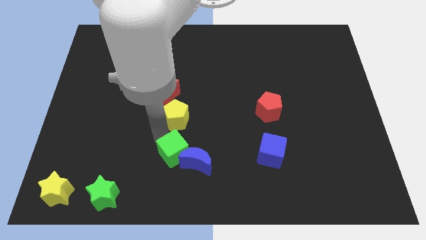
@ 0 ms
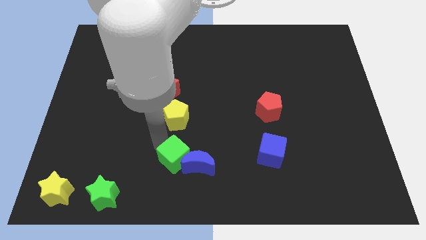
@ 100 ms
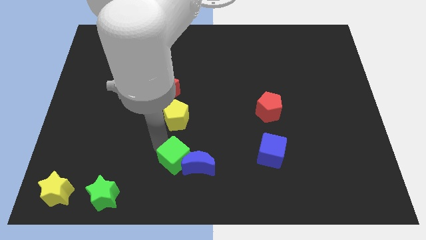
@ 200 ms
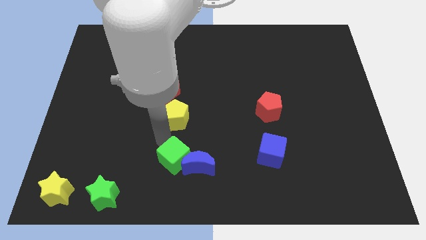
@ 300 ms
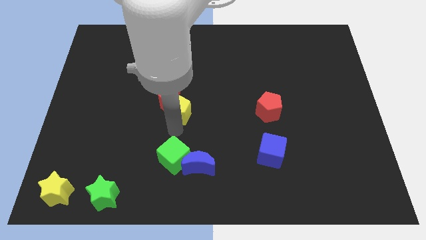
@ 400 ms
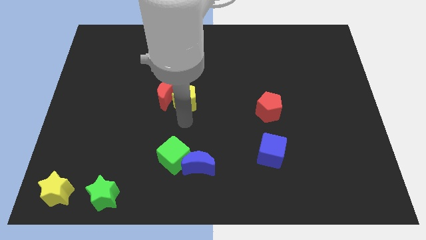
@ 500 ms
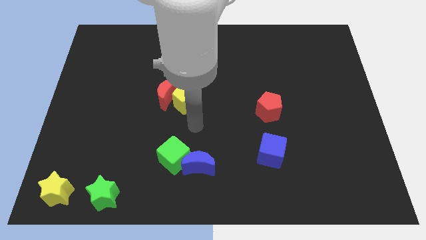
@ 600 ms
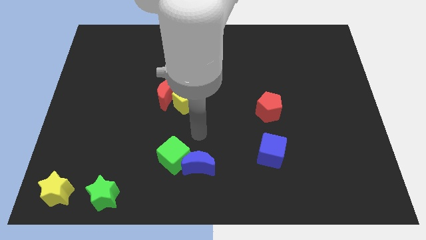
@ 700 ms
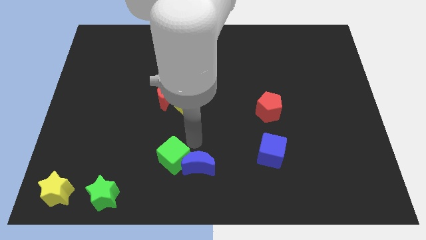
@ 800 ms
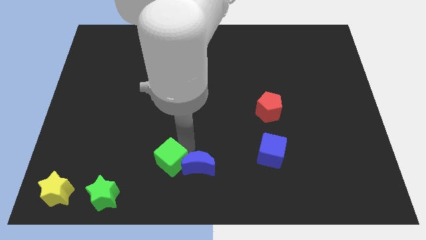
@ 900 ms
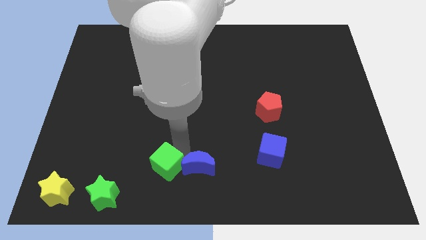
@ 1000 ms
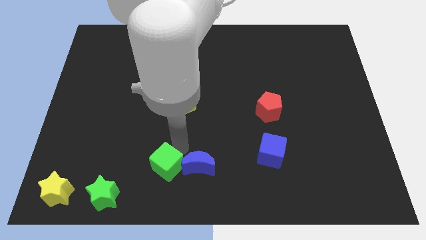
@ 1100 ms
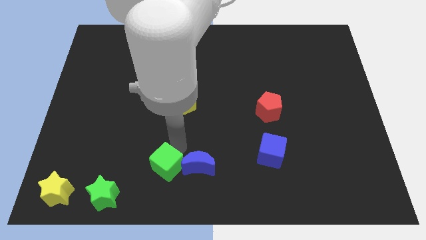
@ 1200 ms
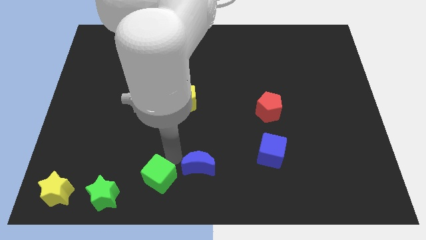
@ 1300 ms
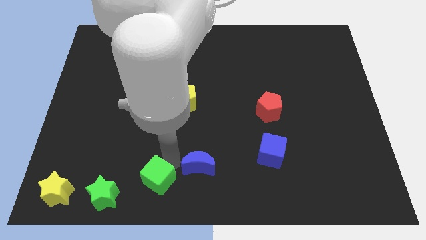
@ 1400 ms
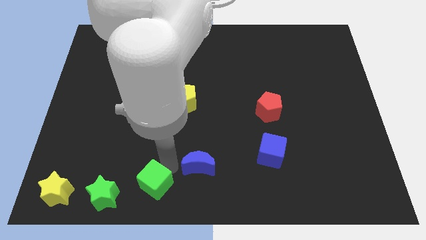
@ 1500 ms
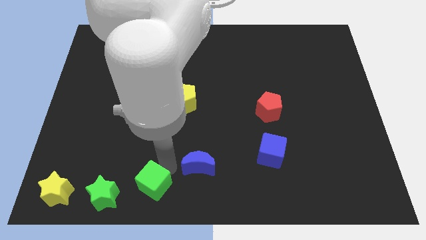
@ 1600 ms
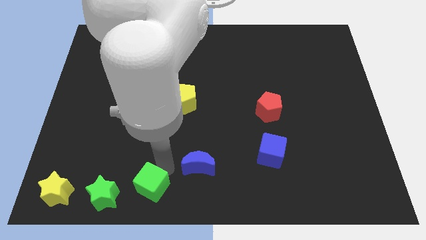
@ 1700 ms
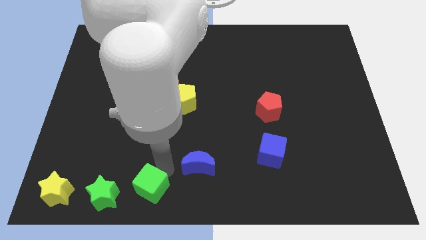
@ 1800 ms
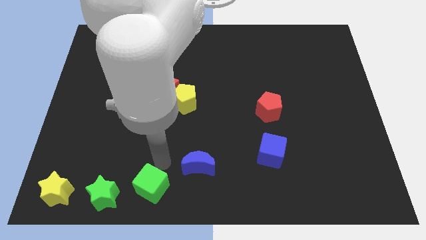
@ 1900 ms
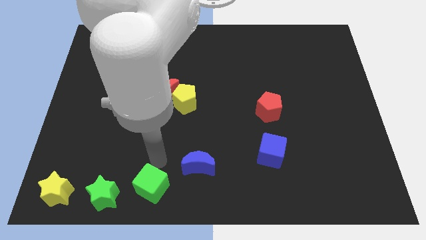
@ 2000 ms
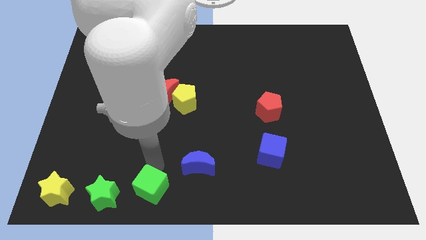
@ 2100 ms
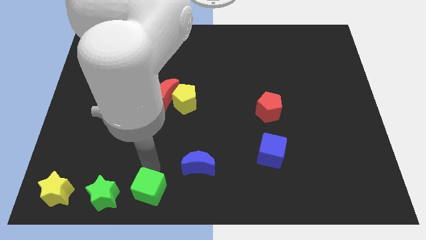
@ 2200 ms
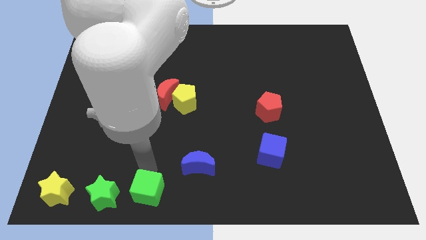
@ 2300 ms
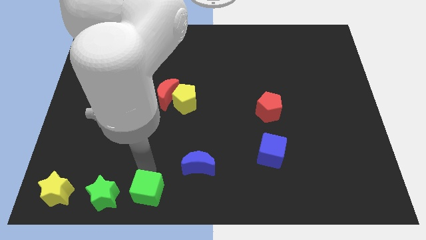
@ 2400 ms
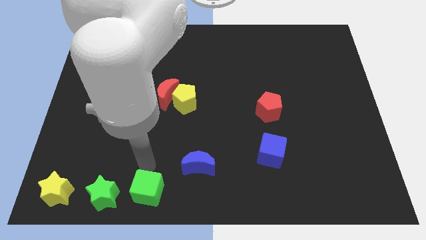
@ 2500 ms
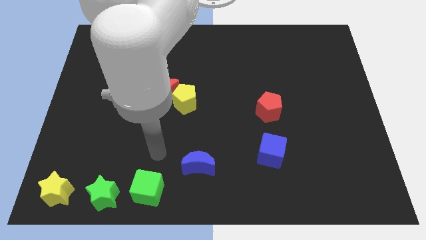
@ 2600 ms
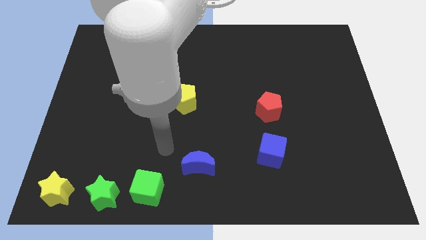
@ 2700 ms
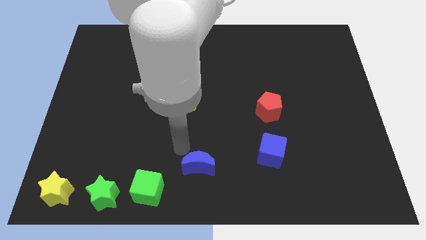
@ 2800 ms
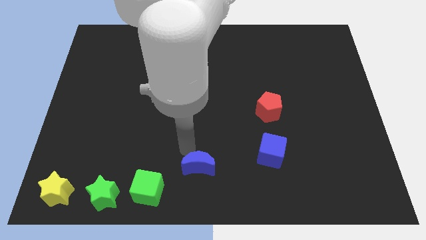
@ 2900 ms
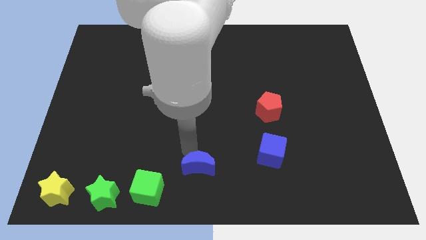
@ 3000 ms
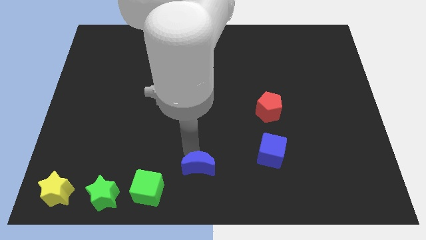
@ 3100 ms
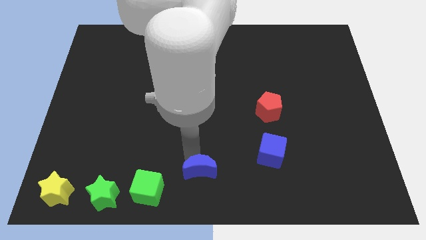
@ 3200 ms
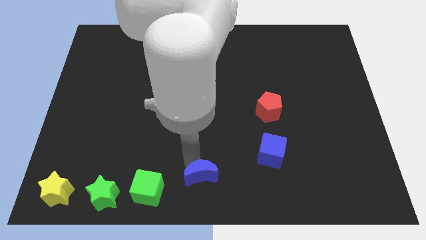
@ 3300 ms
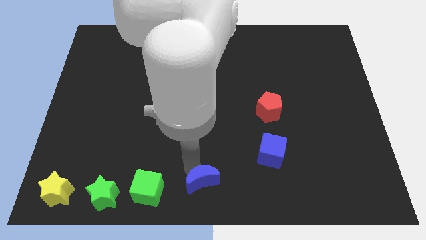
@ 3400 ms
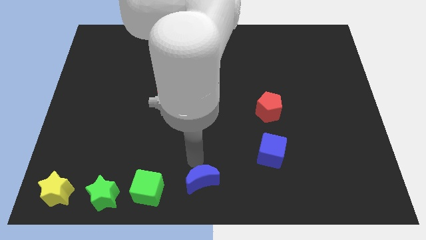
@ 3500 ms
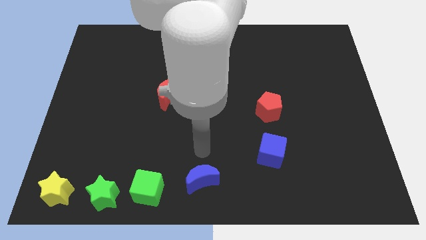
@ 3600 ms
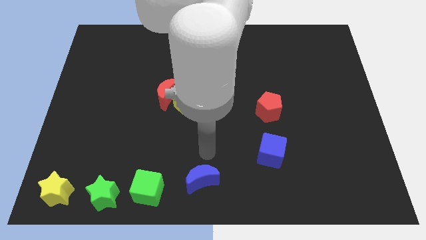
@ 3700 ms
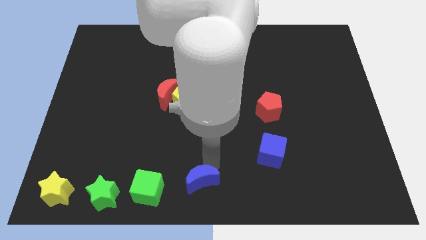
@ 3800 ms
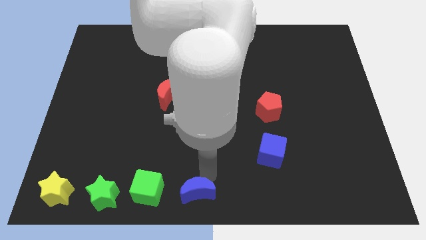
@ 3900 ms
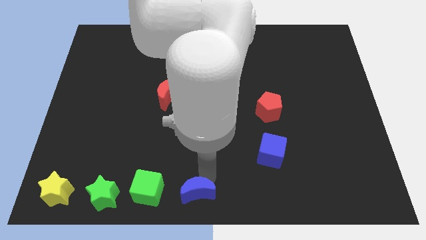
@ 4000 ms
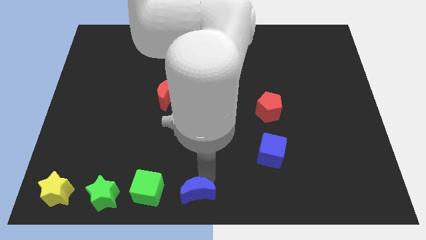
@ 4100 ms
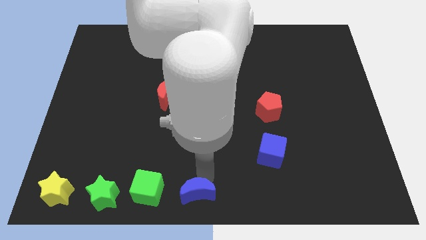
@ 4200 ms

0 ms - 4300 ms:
push green cube along with blue crescent to bottom

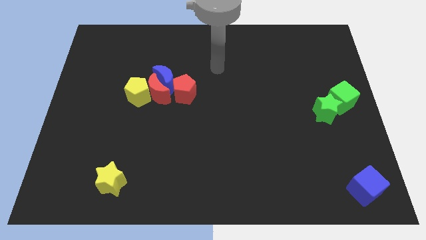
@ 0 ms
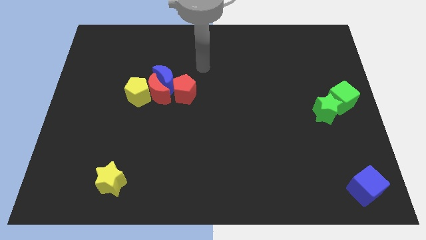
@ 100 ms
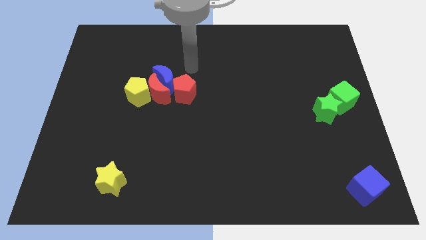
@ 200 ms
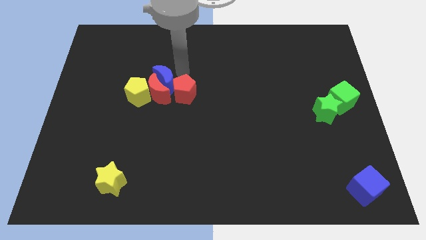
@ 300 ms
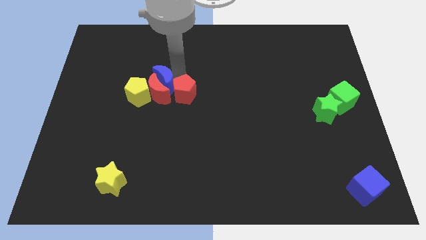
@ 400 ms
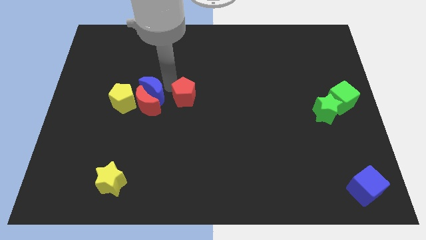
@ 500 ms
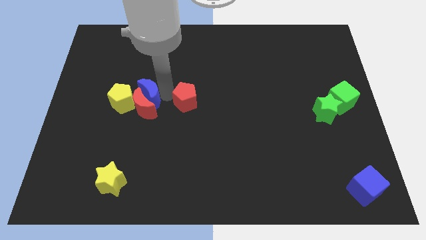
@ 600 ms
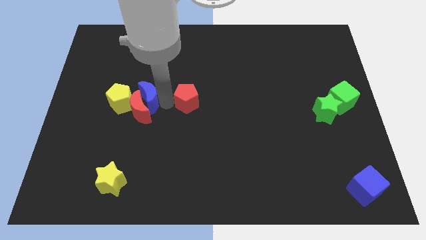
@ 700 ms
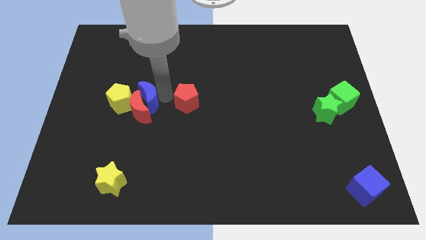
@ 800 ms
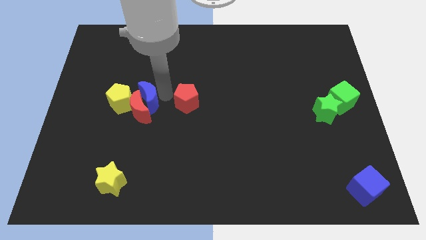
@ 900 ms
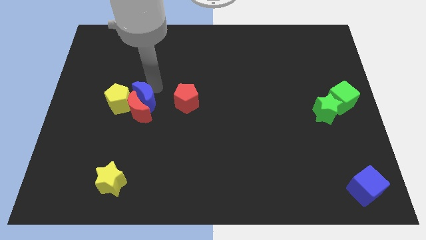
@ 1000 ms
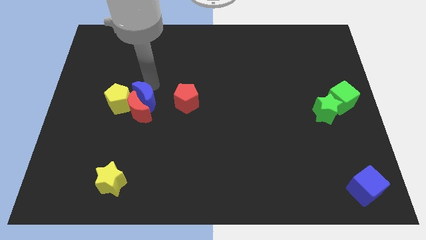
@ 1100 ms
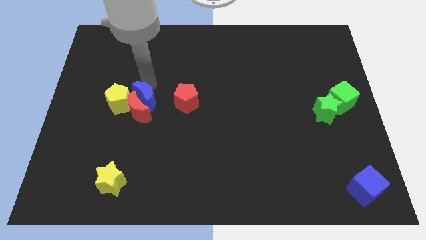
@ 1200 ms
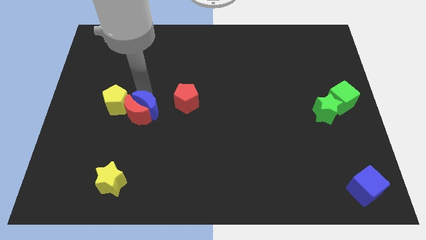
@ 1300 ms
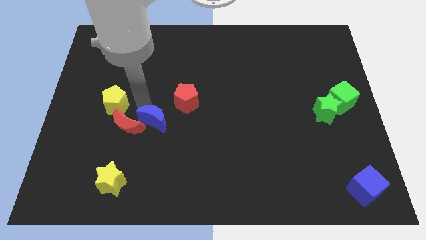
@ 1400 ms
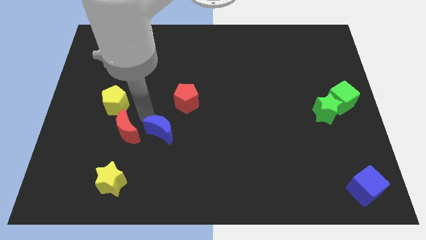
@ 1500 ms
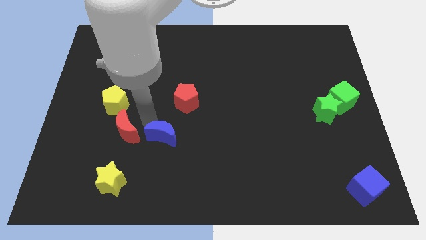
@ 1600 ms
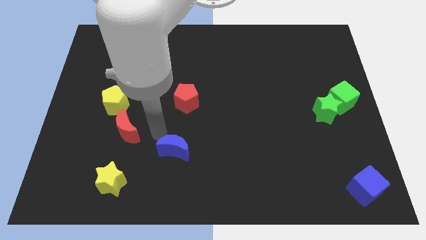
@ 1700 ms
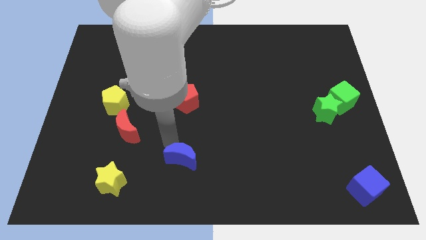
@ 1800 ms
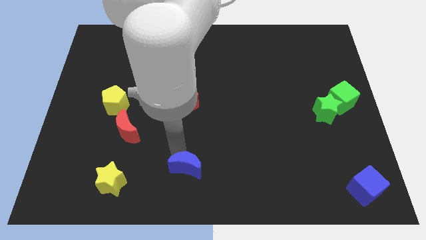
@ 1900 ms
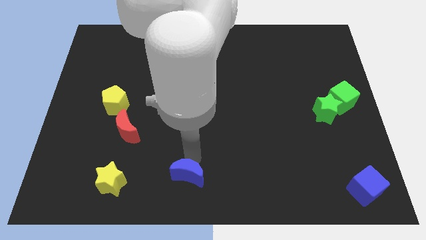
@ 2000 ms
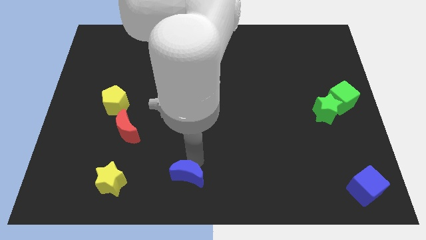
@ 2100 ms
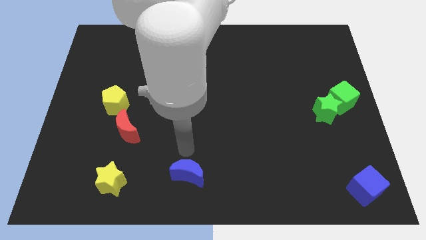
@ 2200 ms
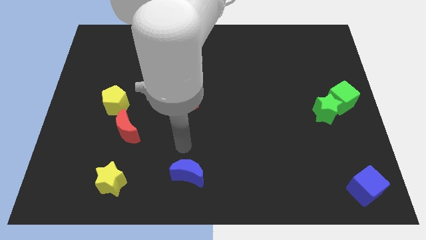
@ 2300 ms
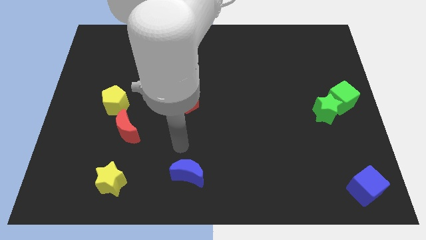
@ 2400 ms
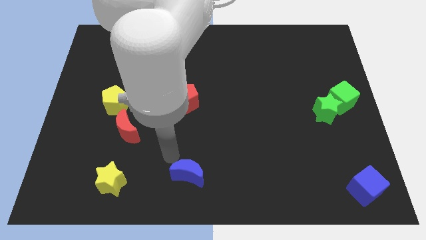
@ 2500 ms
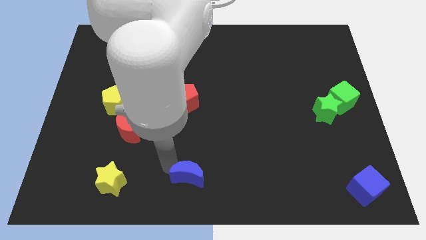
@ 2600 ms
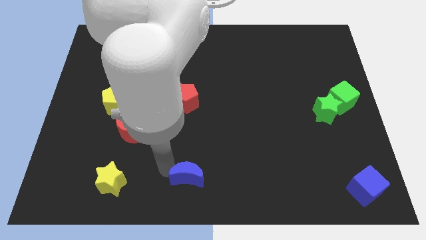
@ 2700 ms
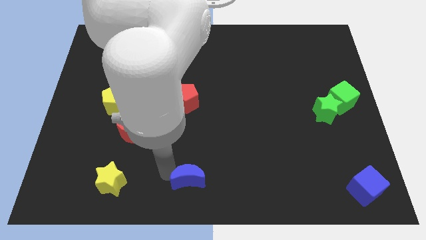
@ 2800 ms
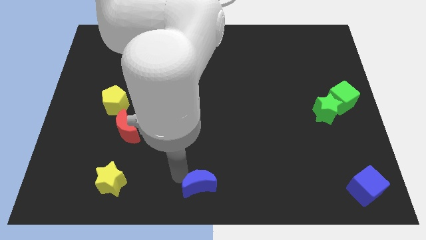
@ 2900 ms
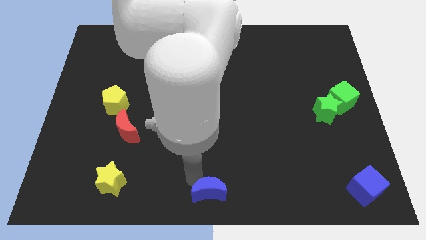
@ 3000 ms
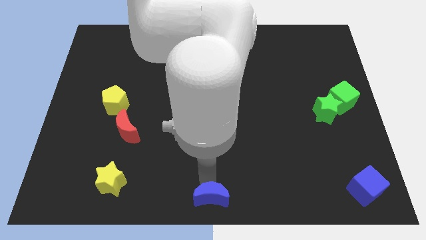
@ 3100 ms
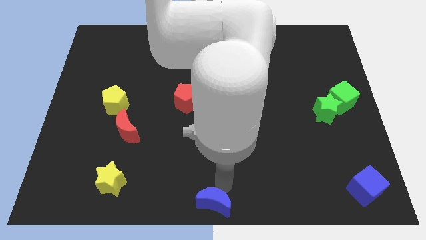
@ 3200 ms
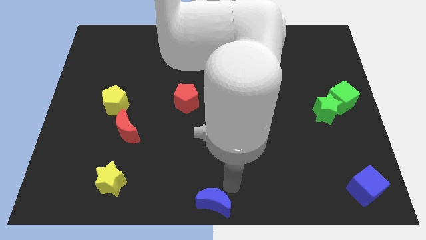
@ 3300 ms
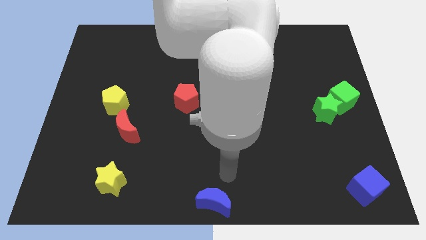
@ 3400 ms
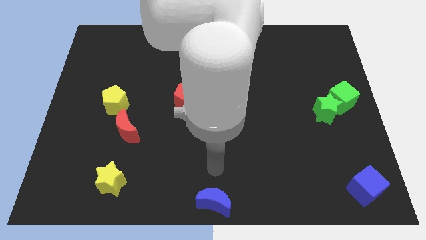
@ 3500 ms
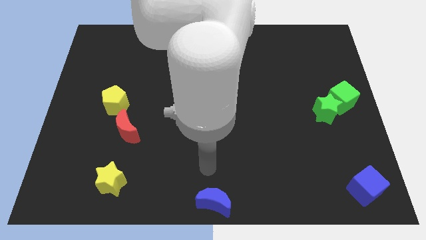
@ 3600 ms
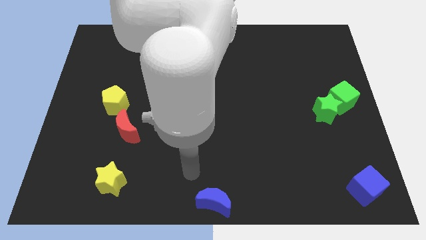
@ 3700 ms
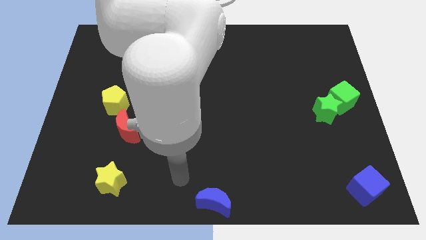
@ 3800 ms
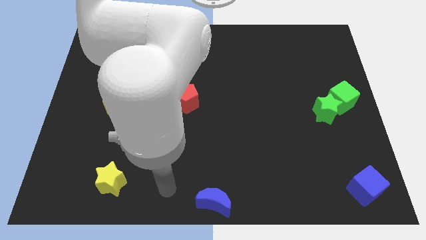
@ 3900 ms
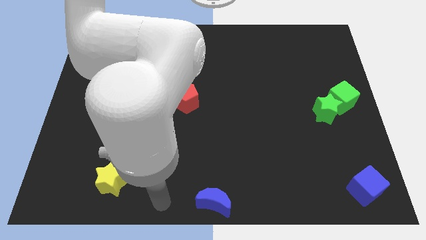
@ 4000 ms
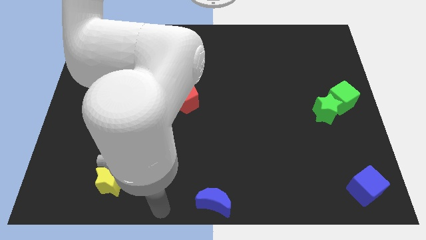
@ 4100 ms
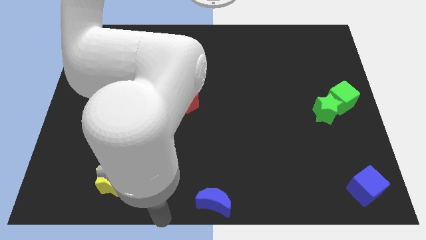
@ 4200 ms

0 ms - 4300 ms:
place the blue moon towards the bottom center of the board

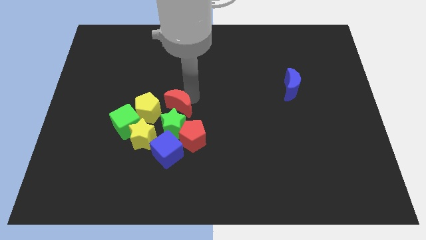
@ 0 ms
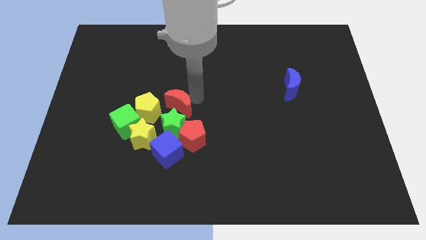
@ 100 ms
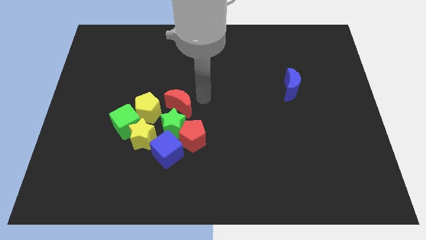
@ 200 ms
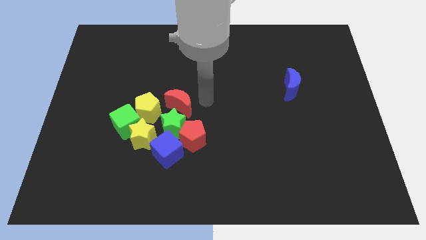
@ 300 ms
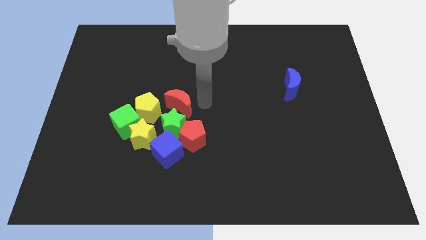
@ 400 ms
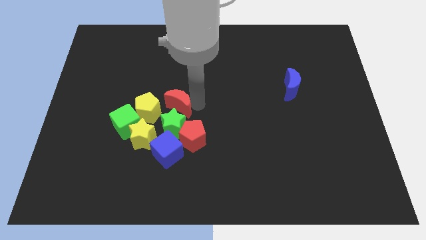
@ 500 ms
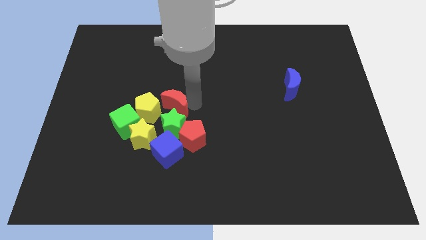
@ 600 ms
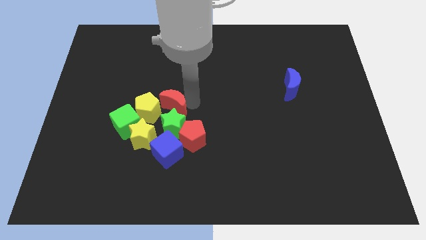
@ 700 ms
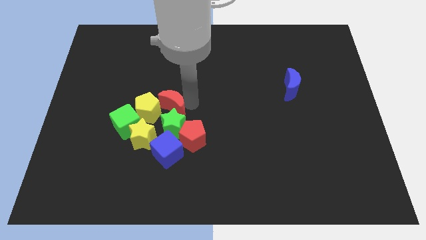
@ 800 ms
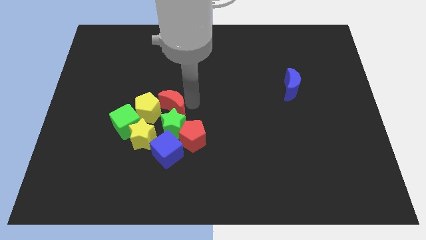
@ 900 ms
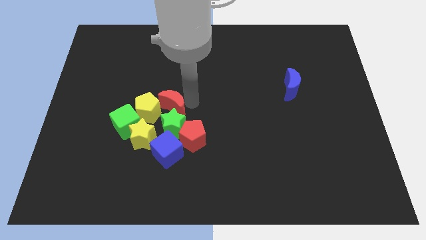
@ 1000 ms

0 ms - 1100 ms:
push the red moon into the yellow pentagon
